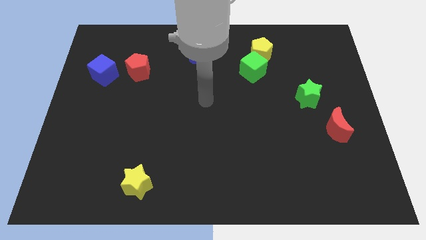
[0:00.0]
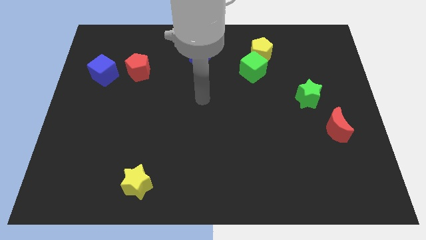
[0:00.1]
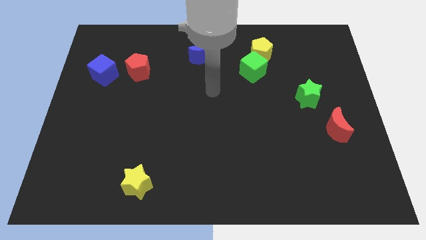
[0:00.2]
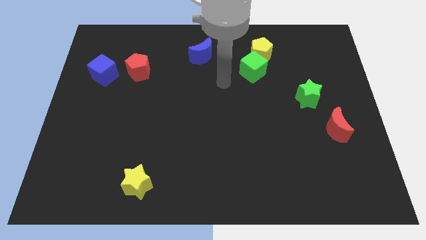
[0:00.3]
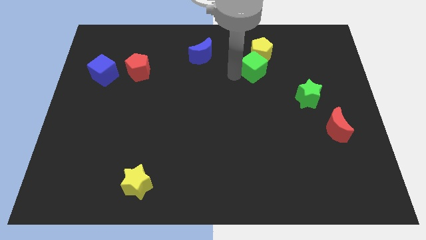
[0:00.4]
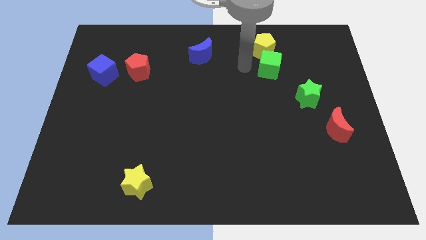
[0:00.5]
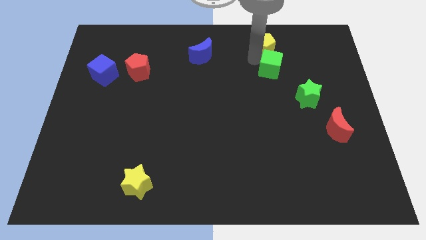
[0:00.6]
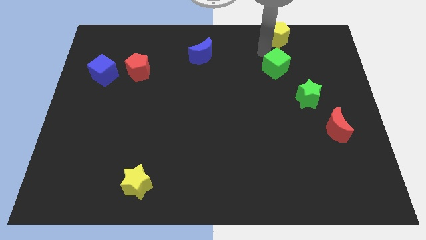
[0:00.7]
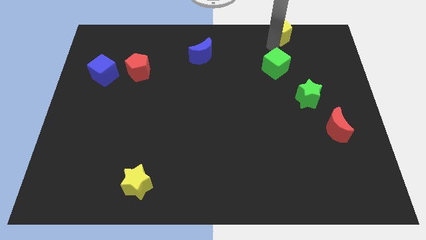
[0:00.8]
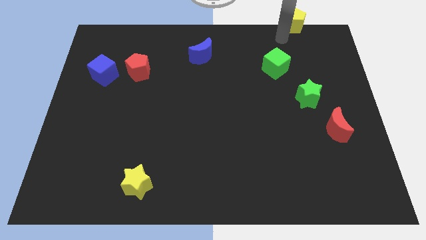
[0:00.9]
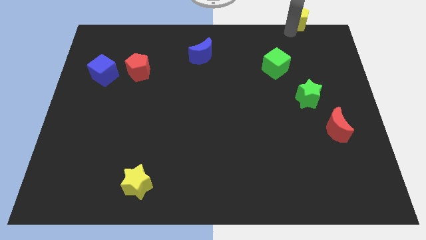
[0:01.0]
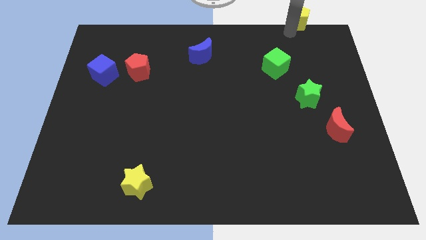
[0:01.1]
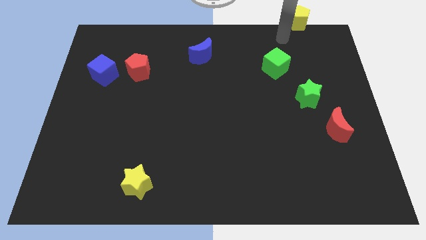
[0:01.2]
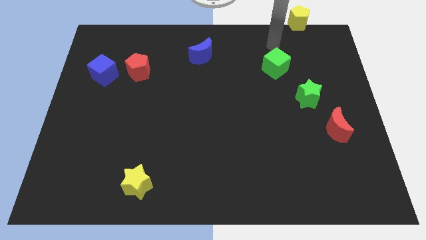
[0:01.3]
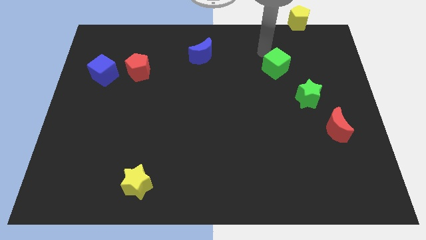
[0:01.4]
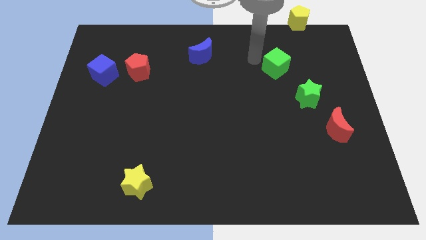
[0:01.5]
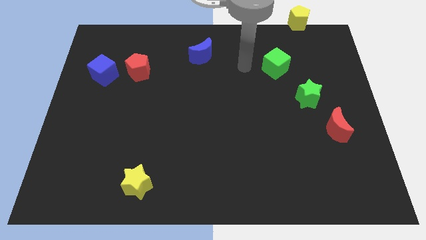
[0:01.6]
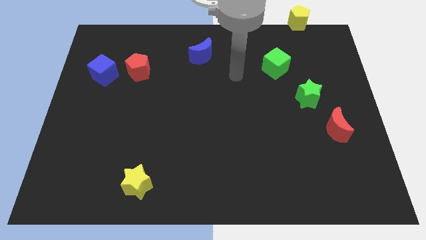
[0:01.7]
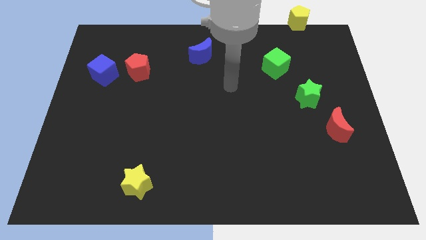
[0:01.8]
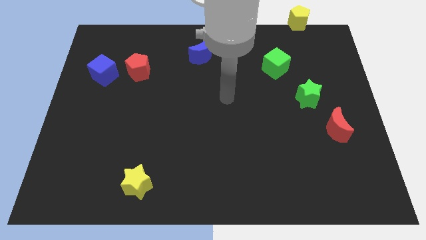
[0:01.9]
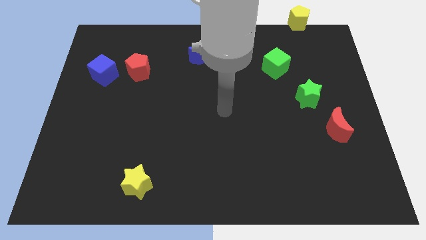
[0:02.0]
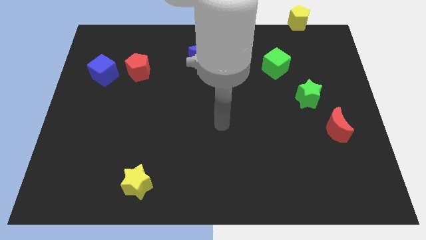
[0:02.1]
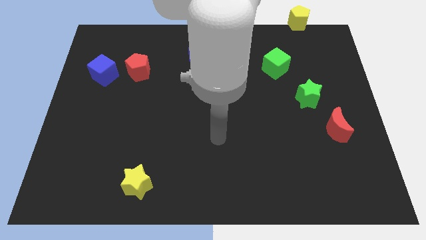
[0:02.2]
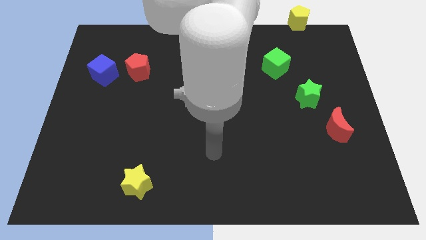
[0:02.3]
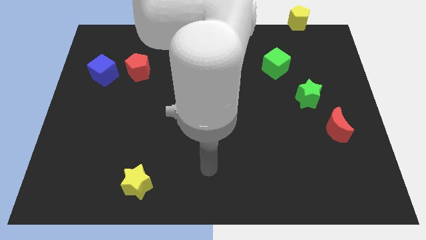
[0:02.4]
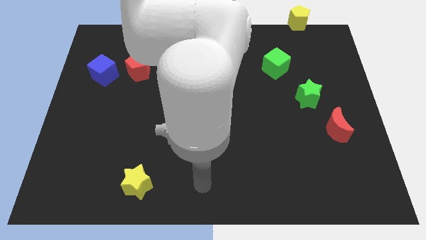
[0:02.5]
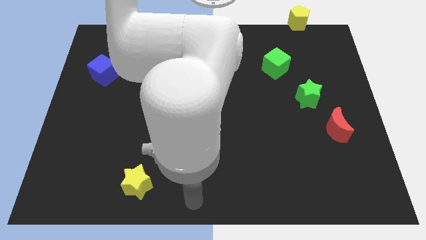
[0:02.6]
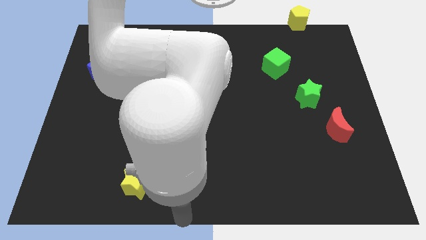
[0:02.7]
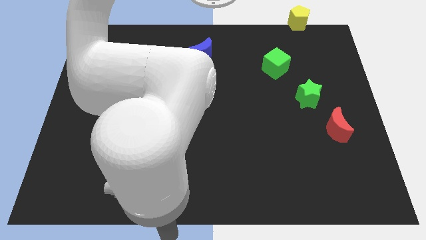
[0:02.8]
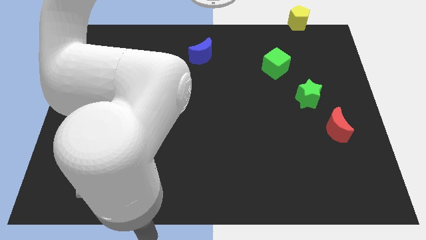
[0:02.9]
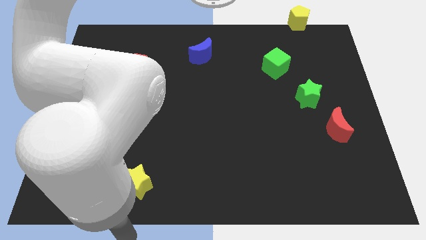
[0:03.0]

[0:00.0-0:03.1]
move the yellow pentagon to the top right of the board

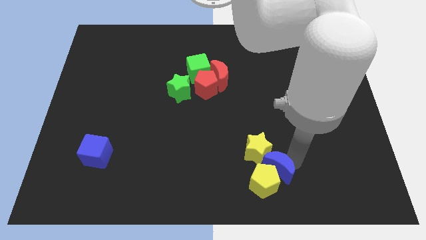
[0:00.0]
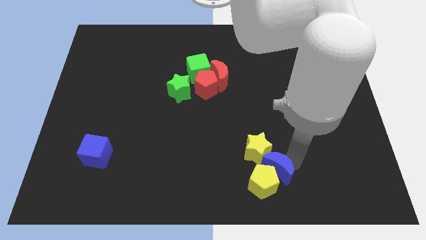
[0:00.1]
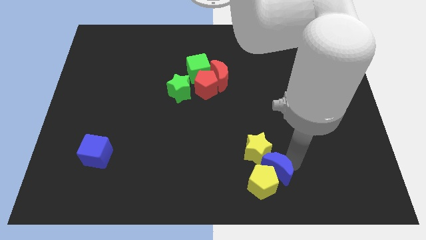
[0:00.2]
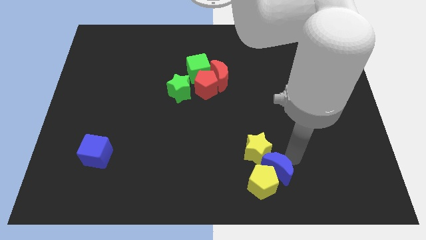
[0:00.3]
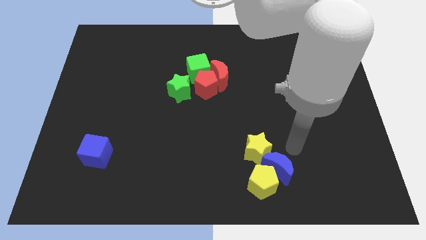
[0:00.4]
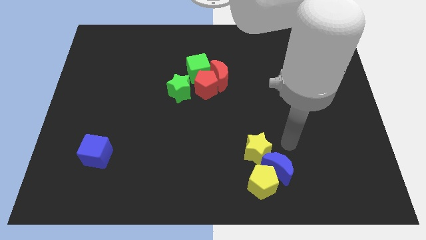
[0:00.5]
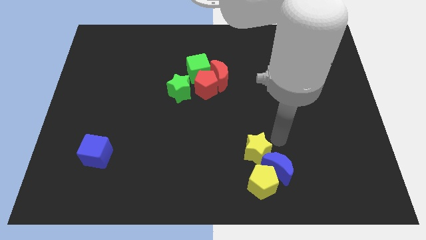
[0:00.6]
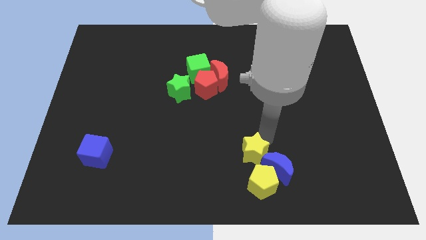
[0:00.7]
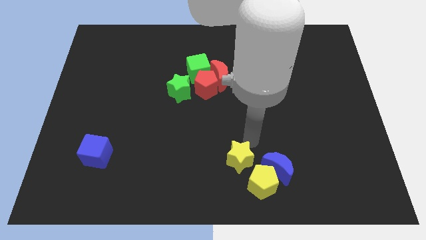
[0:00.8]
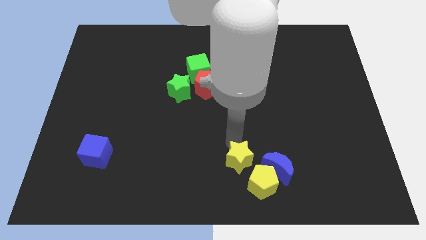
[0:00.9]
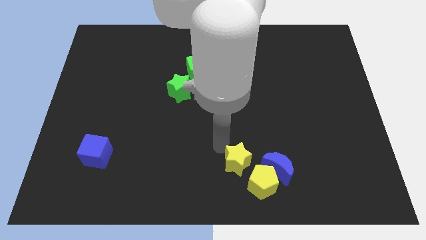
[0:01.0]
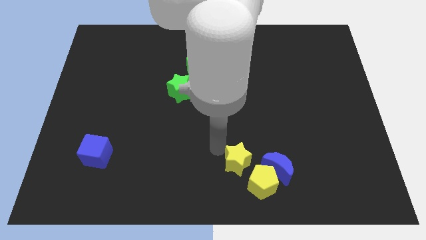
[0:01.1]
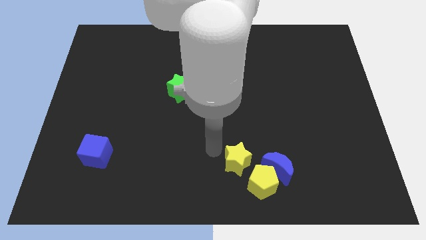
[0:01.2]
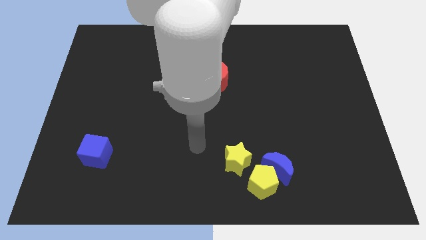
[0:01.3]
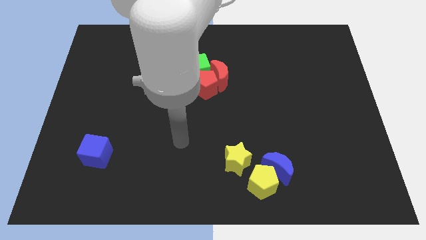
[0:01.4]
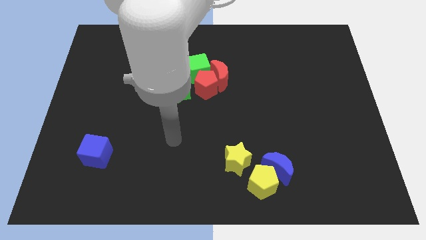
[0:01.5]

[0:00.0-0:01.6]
push the yellow star above the yellow pentagon

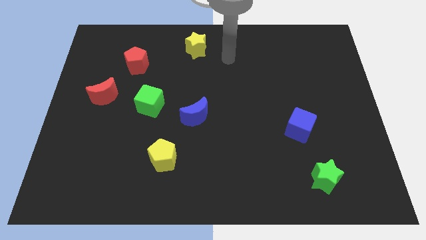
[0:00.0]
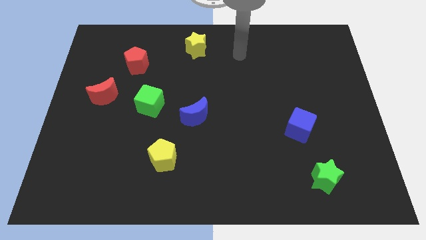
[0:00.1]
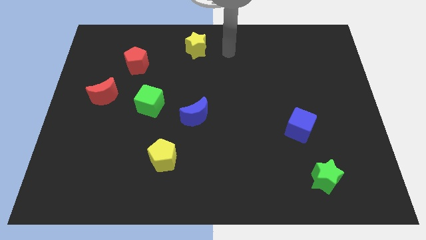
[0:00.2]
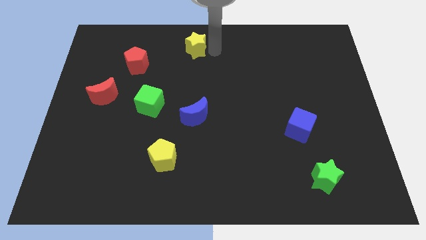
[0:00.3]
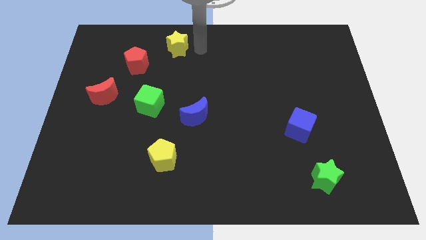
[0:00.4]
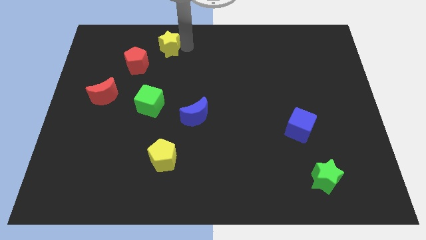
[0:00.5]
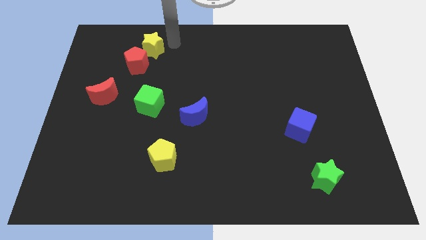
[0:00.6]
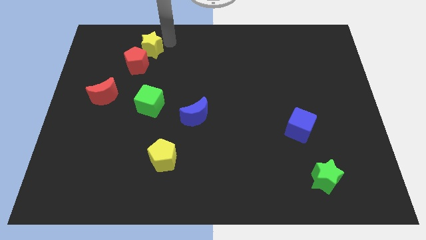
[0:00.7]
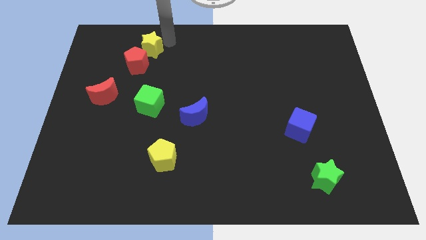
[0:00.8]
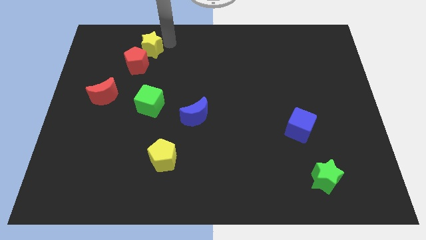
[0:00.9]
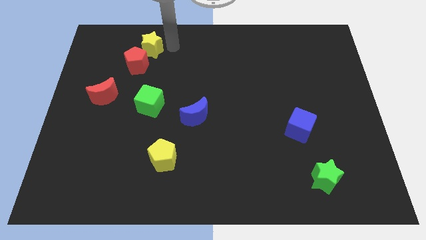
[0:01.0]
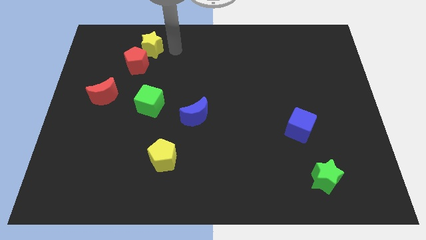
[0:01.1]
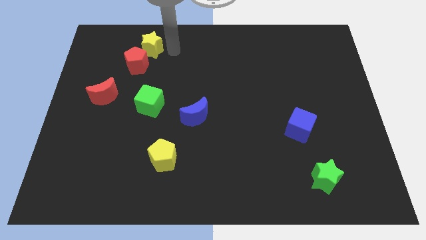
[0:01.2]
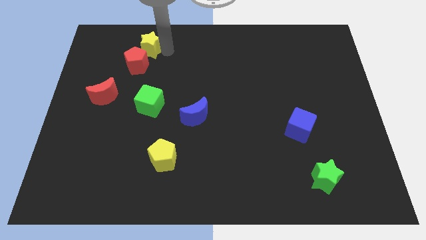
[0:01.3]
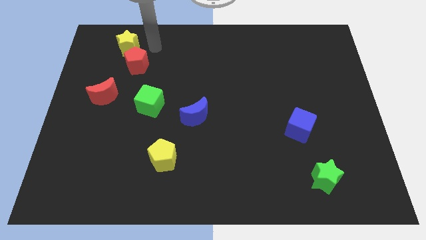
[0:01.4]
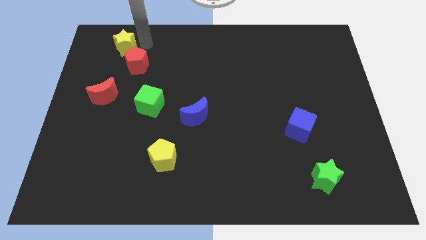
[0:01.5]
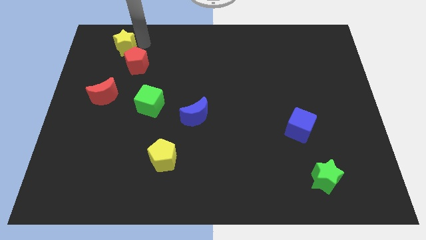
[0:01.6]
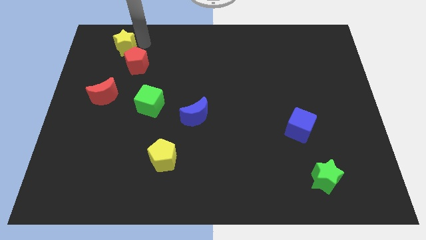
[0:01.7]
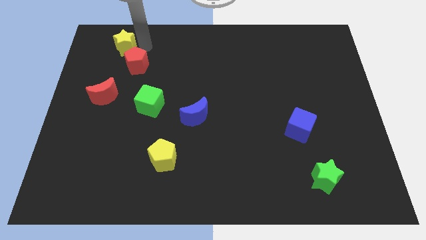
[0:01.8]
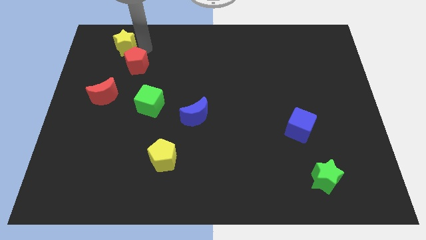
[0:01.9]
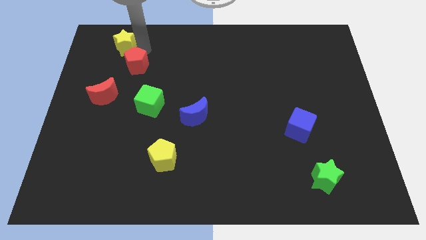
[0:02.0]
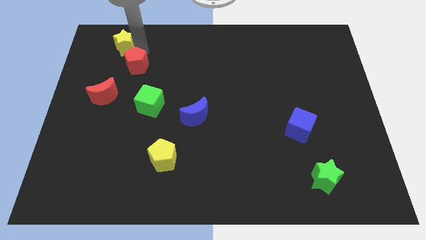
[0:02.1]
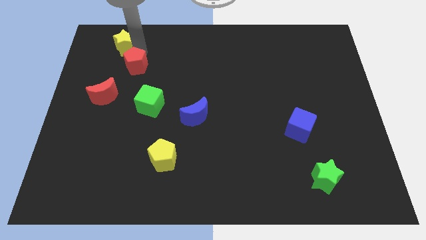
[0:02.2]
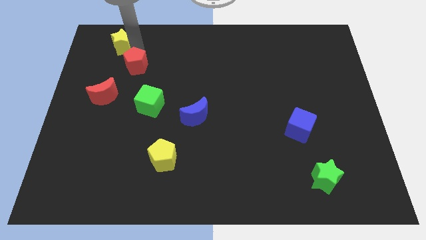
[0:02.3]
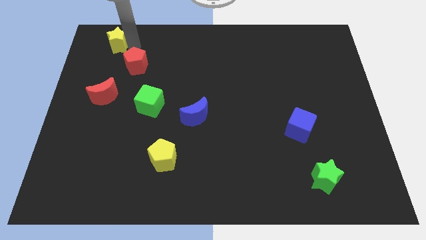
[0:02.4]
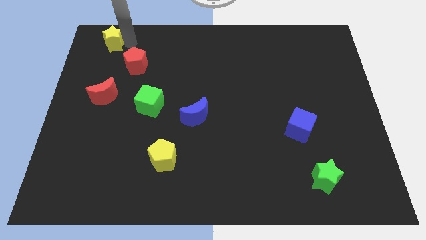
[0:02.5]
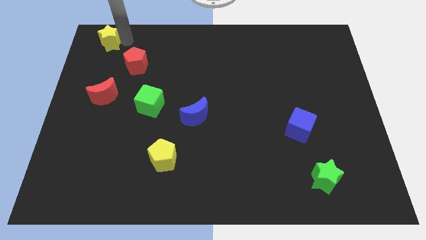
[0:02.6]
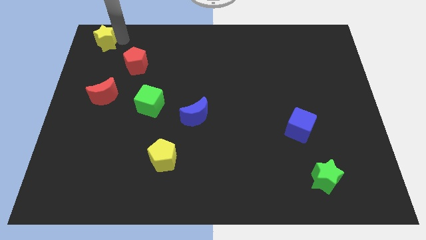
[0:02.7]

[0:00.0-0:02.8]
move the yellow star diagonal to red pentagon

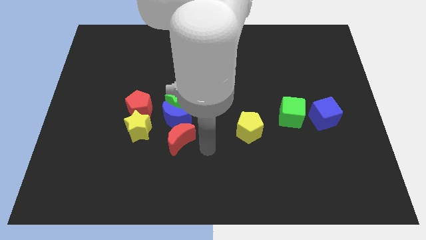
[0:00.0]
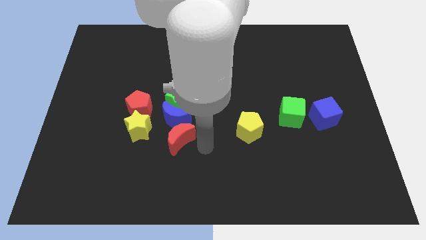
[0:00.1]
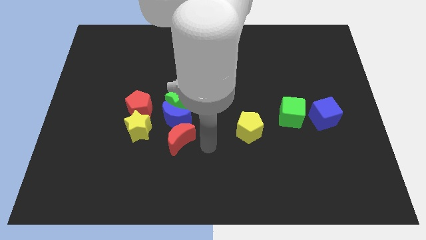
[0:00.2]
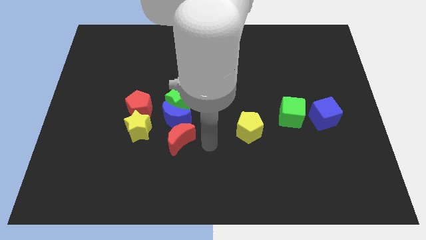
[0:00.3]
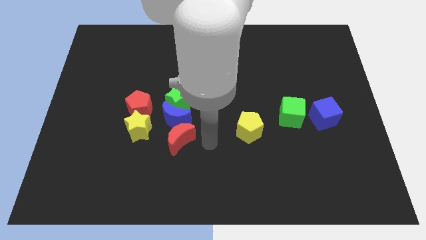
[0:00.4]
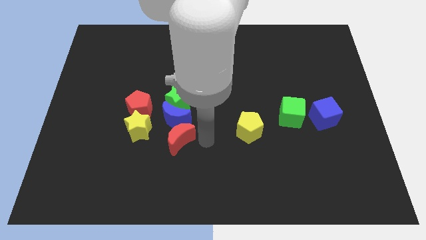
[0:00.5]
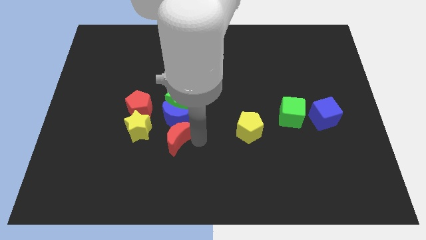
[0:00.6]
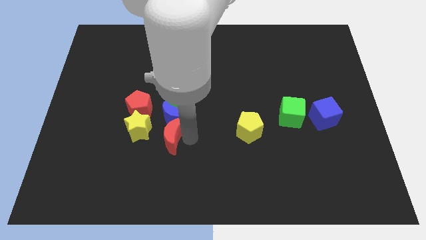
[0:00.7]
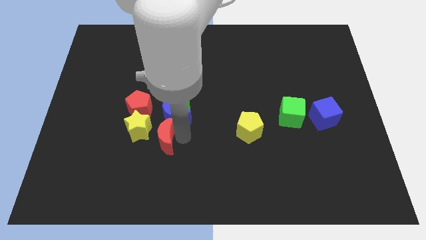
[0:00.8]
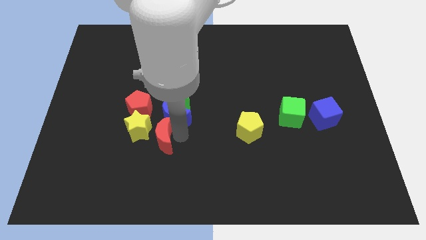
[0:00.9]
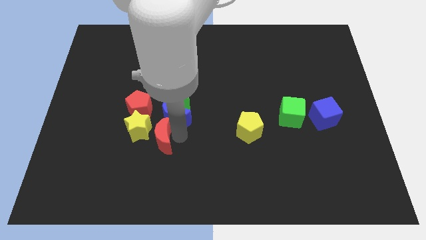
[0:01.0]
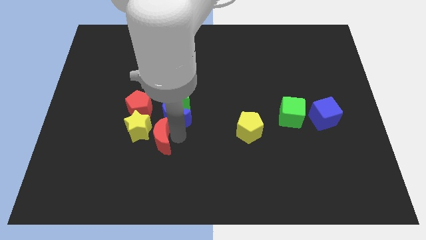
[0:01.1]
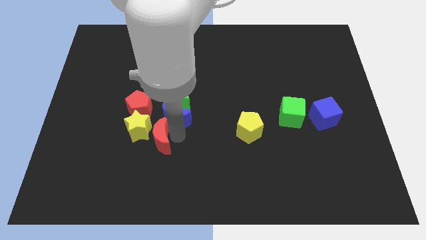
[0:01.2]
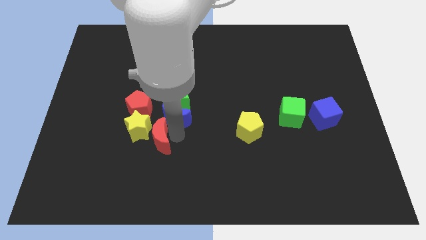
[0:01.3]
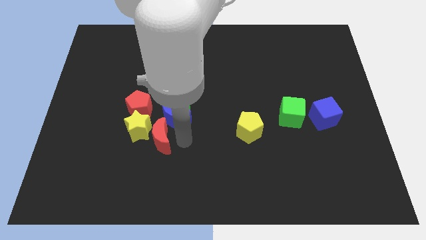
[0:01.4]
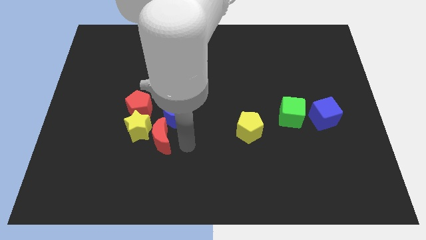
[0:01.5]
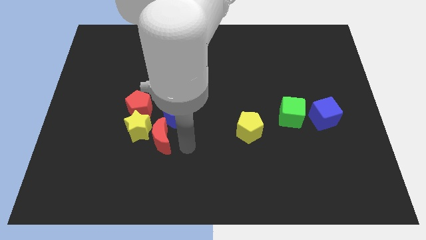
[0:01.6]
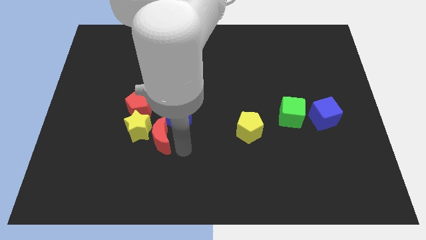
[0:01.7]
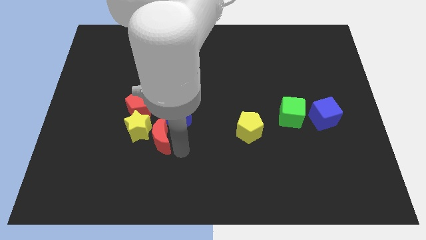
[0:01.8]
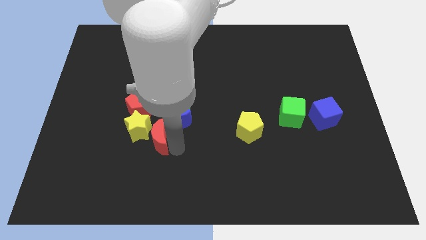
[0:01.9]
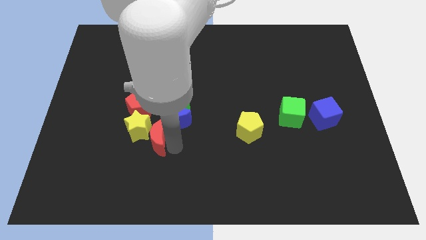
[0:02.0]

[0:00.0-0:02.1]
slide red moon close to yellow star
